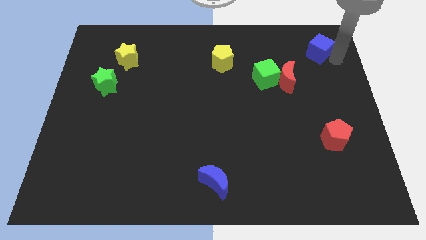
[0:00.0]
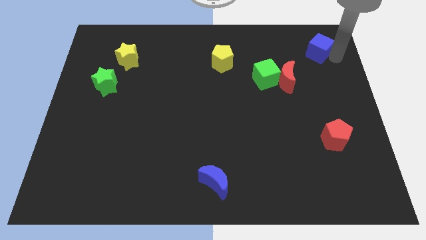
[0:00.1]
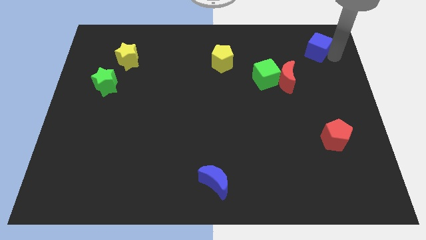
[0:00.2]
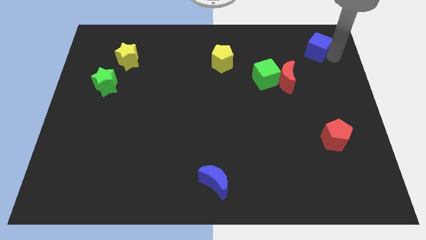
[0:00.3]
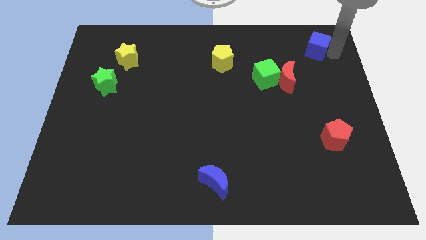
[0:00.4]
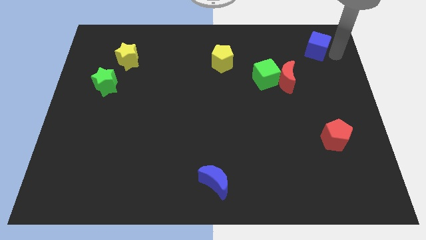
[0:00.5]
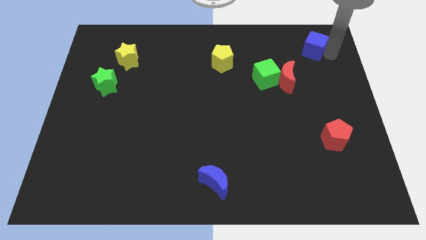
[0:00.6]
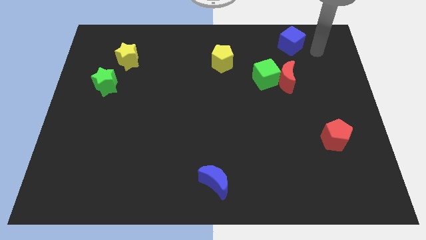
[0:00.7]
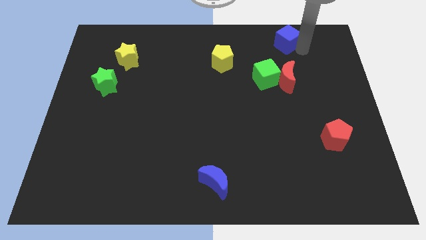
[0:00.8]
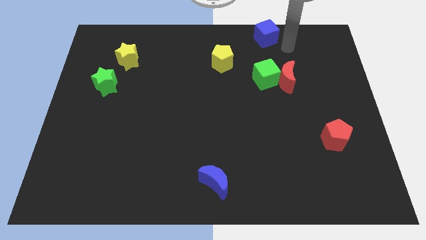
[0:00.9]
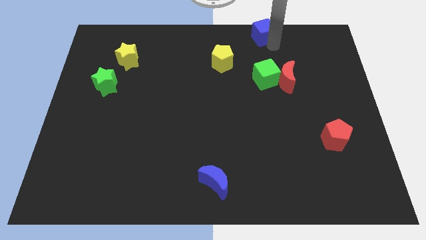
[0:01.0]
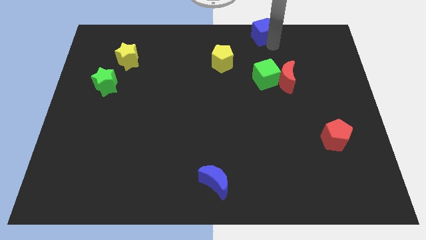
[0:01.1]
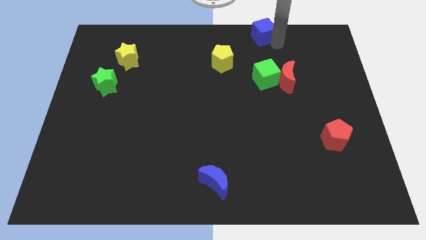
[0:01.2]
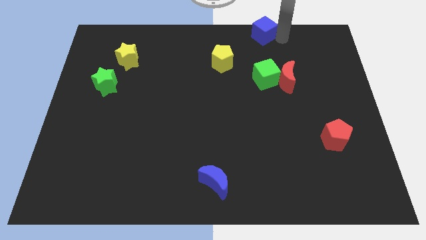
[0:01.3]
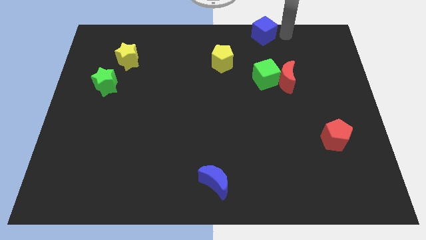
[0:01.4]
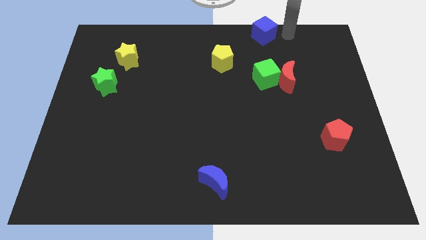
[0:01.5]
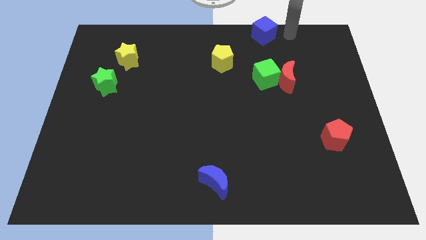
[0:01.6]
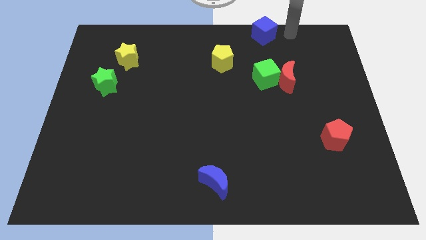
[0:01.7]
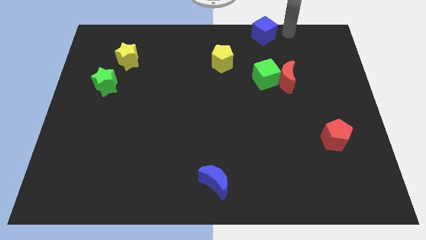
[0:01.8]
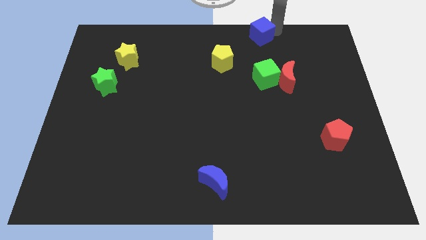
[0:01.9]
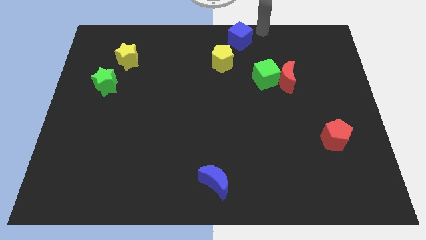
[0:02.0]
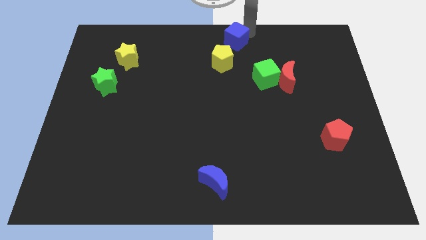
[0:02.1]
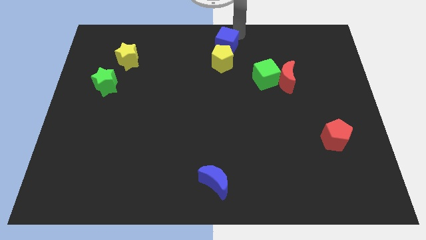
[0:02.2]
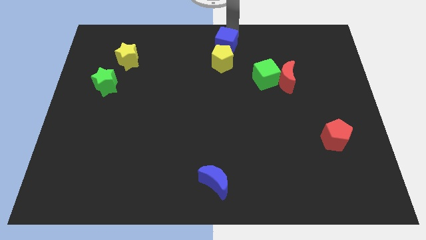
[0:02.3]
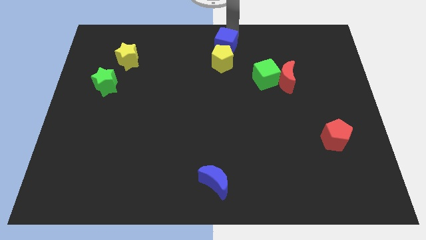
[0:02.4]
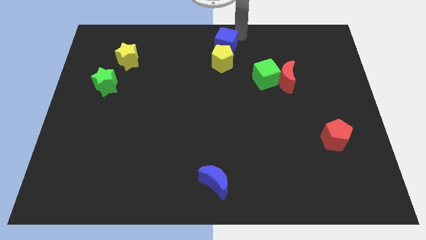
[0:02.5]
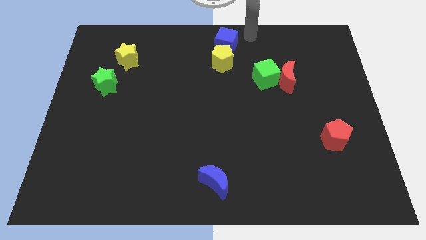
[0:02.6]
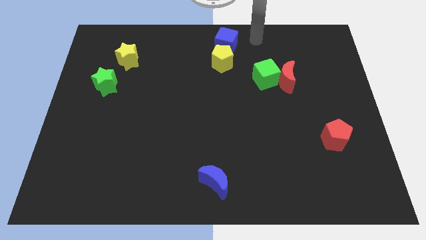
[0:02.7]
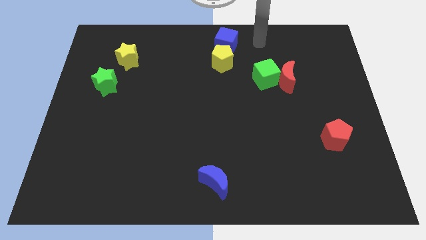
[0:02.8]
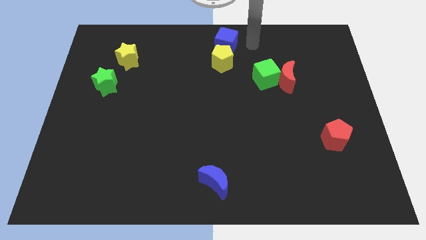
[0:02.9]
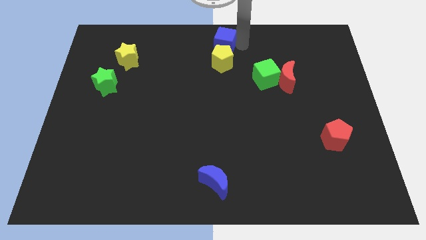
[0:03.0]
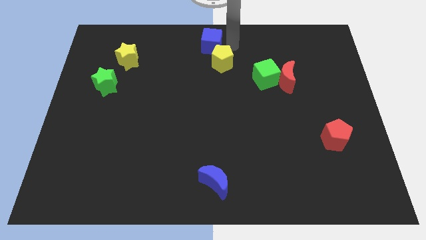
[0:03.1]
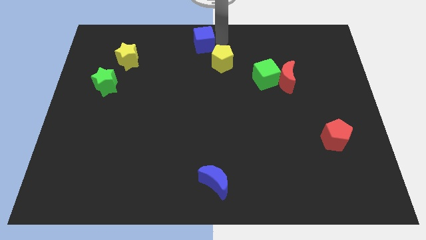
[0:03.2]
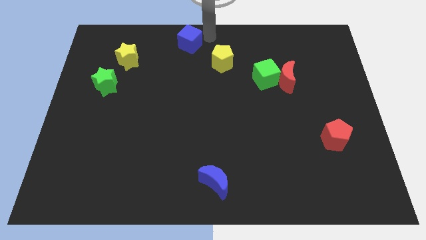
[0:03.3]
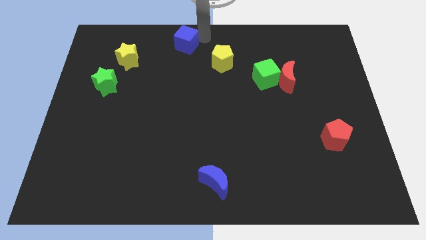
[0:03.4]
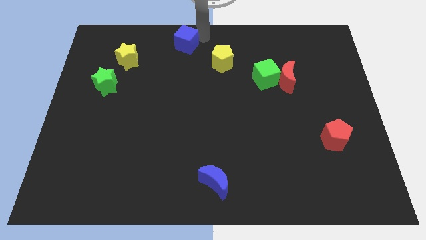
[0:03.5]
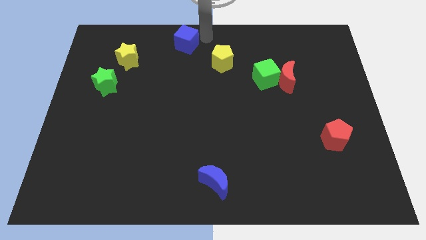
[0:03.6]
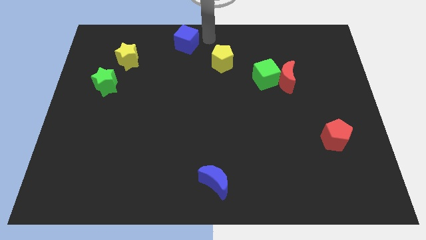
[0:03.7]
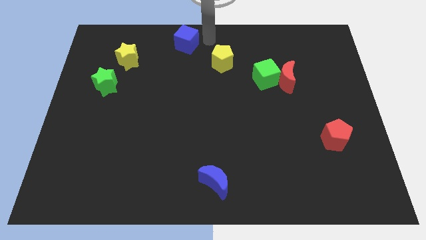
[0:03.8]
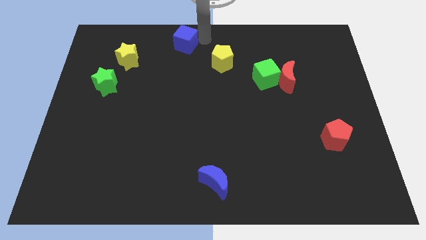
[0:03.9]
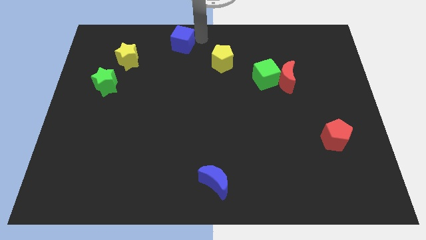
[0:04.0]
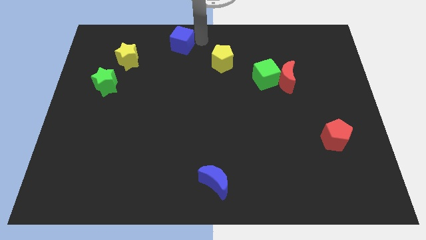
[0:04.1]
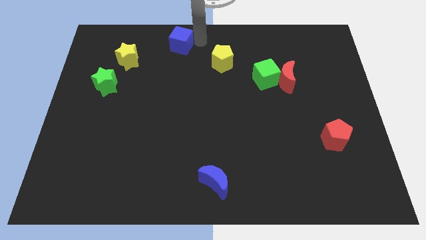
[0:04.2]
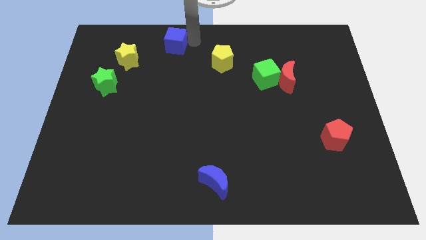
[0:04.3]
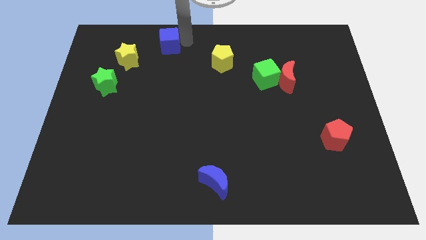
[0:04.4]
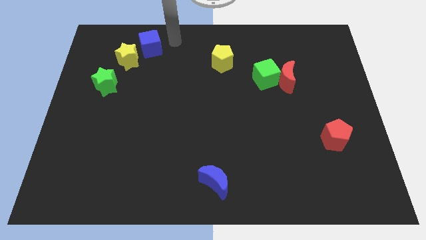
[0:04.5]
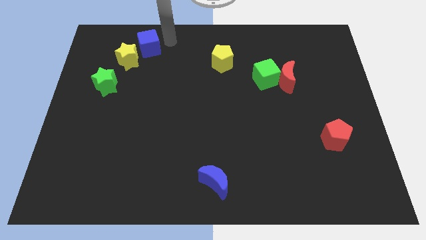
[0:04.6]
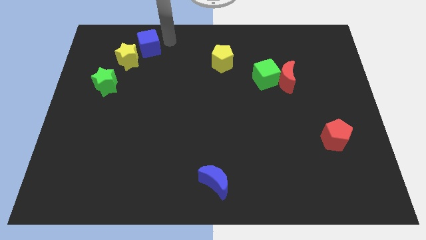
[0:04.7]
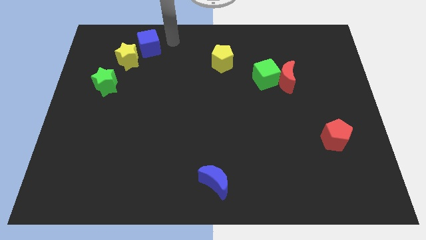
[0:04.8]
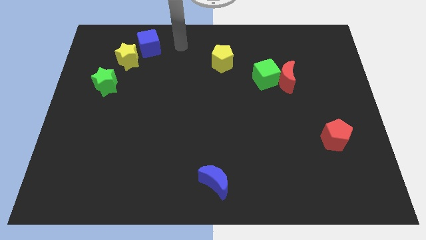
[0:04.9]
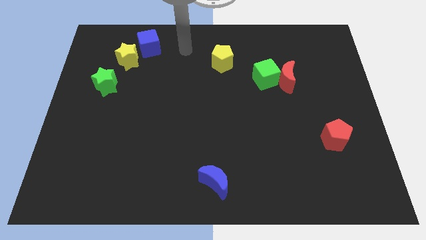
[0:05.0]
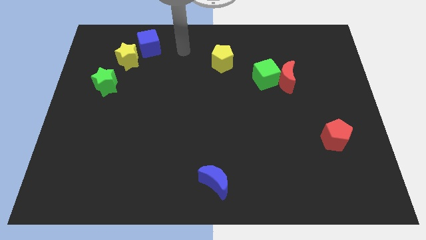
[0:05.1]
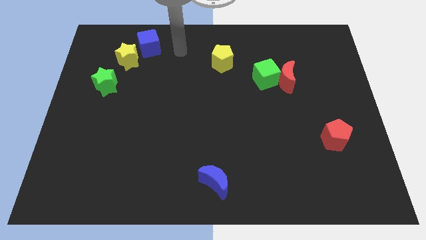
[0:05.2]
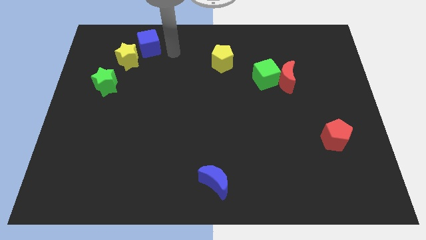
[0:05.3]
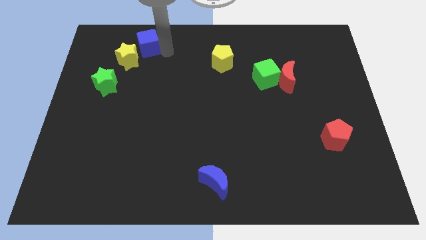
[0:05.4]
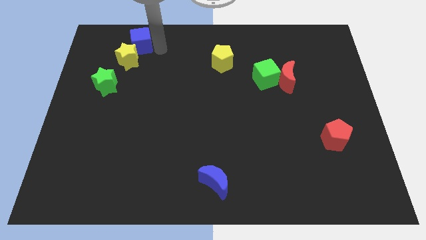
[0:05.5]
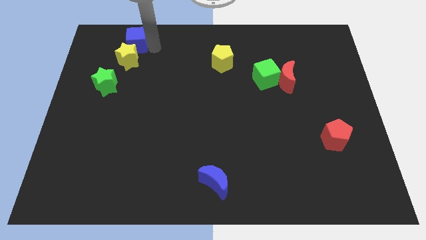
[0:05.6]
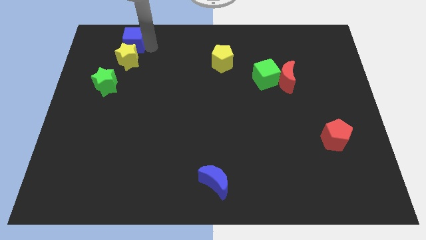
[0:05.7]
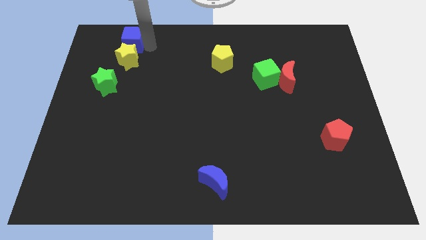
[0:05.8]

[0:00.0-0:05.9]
slide the blue cube to the top side of the yellow star

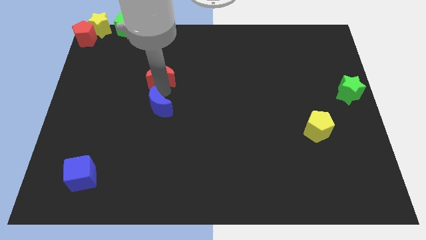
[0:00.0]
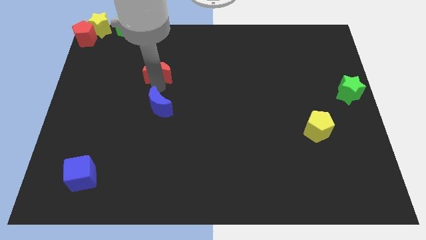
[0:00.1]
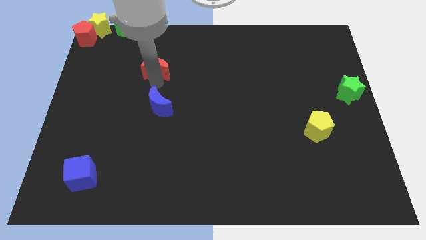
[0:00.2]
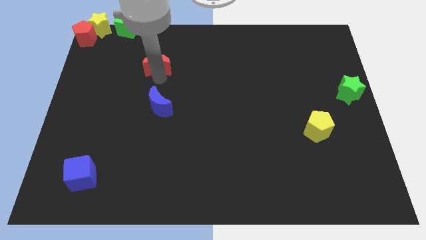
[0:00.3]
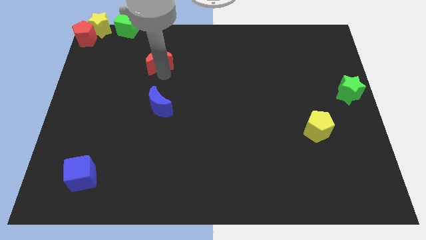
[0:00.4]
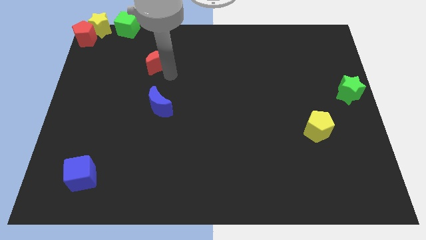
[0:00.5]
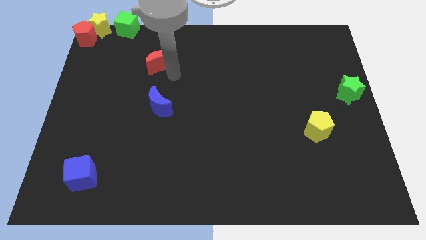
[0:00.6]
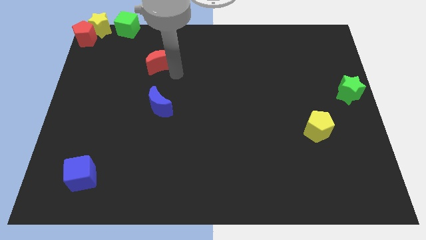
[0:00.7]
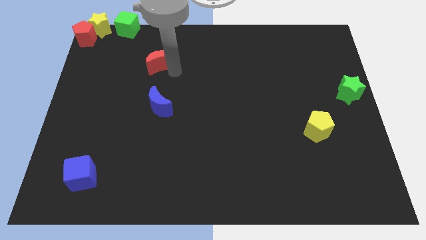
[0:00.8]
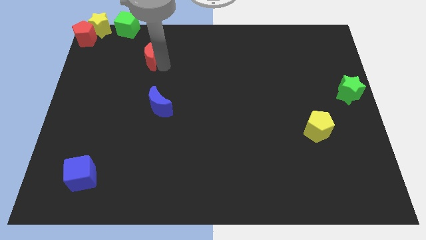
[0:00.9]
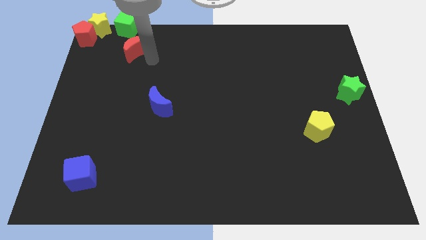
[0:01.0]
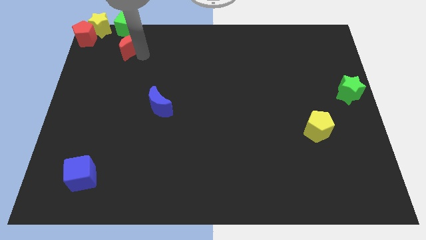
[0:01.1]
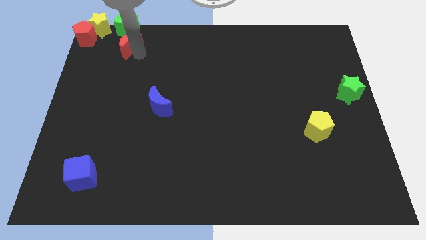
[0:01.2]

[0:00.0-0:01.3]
push the red moon to the bottom side of the green cube

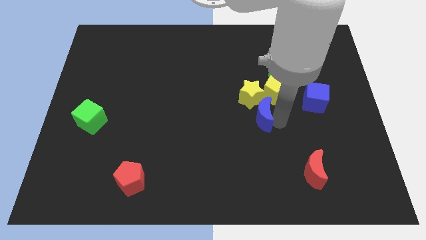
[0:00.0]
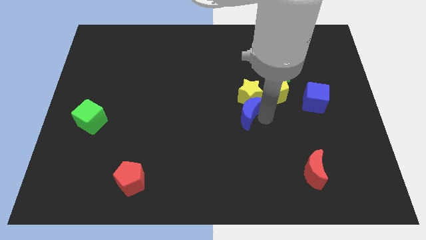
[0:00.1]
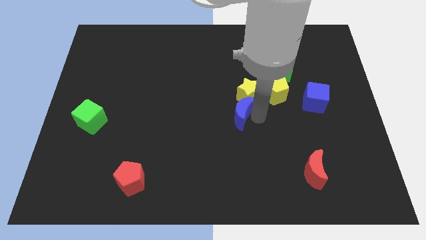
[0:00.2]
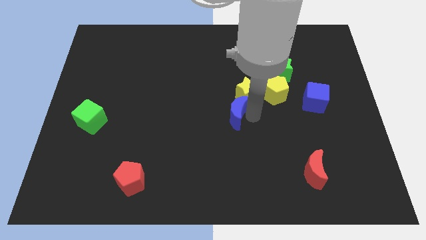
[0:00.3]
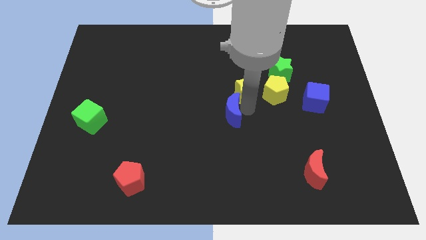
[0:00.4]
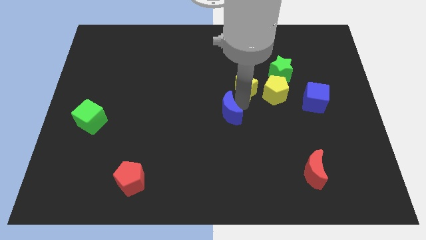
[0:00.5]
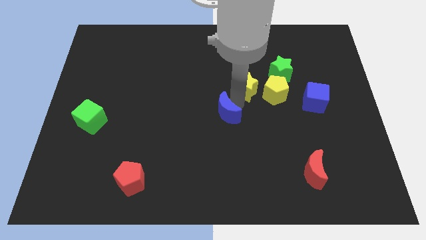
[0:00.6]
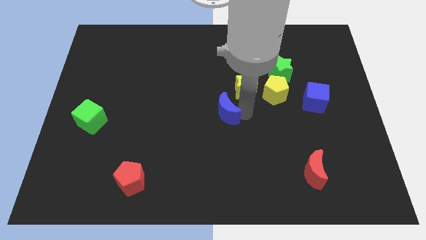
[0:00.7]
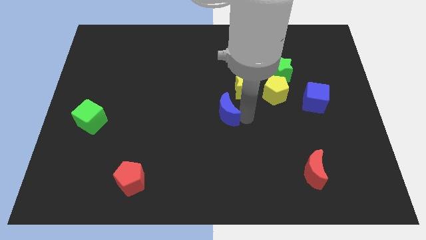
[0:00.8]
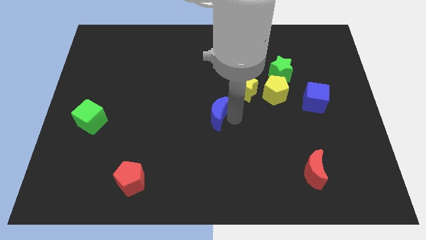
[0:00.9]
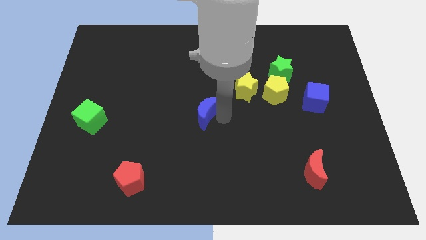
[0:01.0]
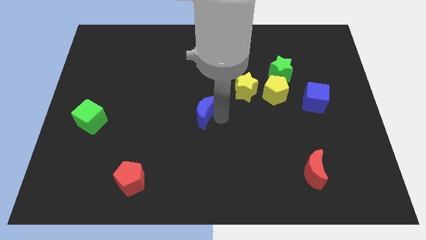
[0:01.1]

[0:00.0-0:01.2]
slide the blue moon towards the center of the board

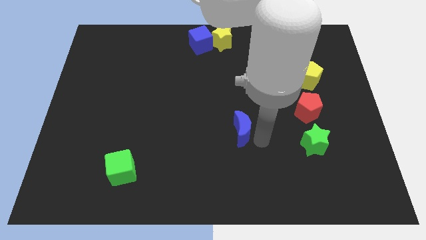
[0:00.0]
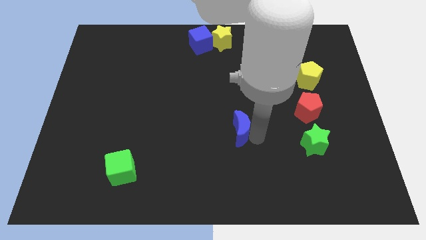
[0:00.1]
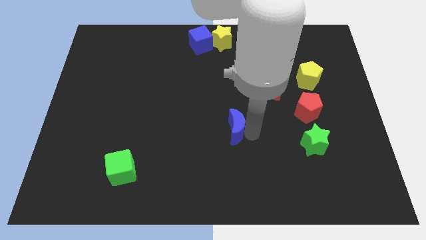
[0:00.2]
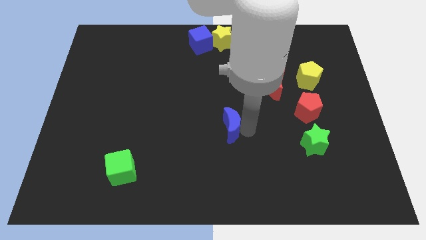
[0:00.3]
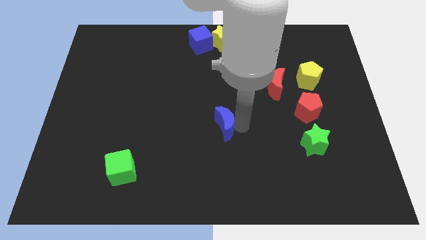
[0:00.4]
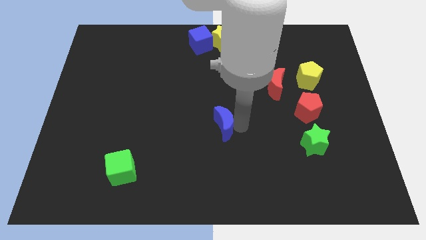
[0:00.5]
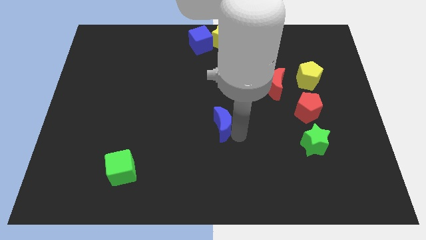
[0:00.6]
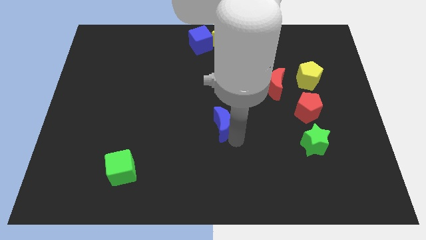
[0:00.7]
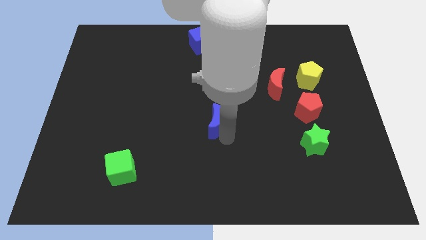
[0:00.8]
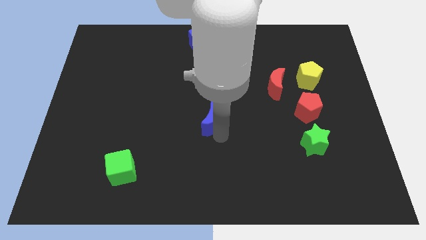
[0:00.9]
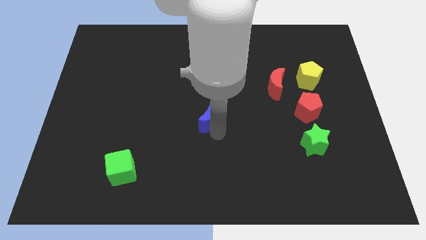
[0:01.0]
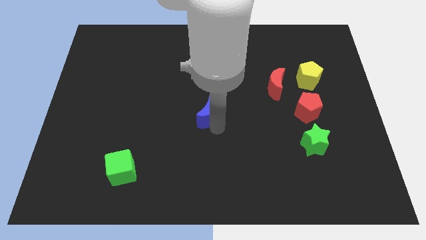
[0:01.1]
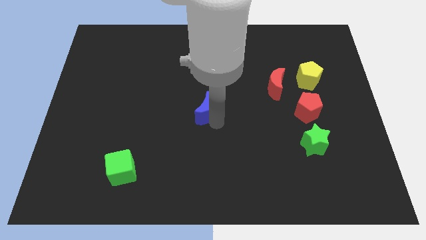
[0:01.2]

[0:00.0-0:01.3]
place the blue cube at the center of the board
